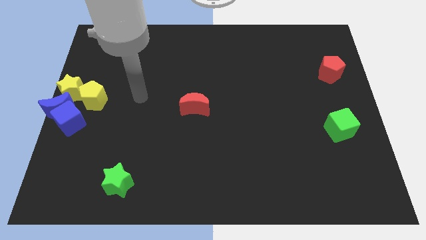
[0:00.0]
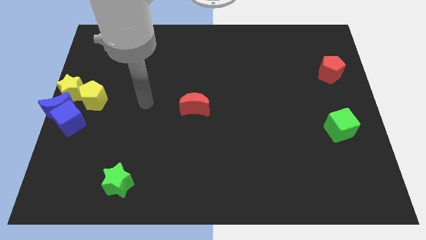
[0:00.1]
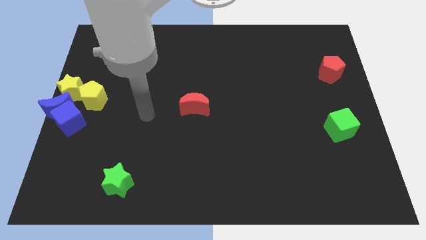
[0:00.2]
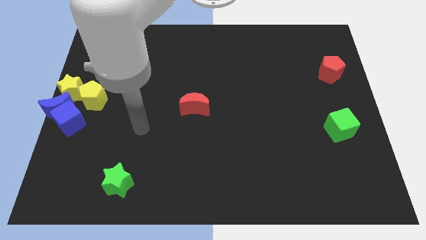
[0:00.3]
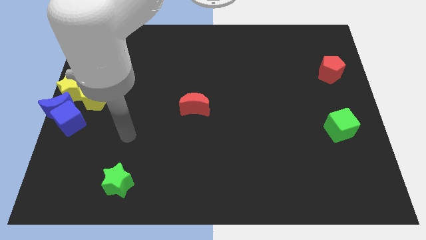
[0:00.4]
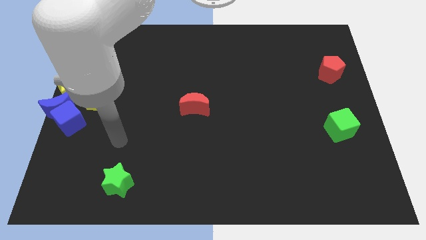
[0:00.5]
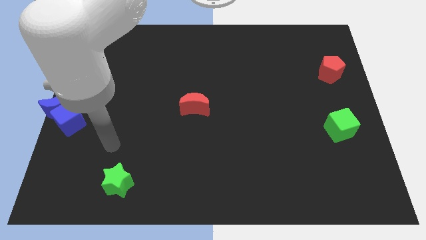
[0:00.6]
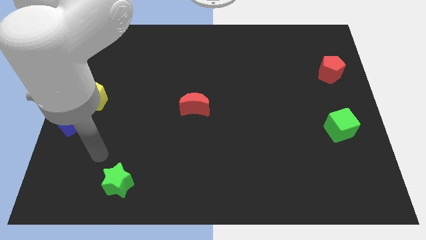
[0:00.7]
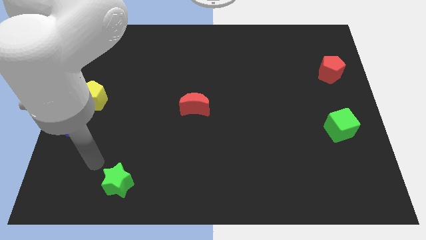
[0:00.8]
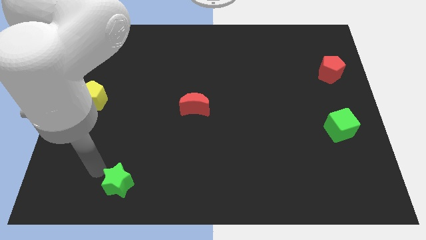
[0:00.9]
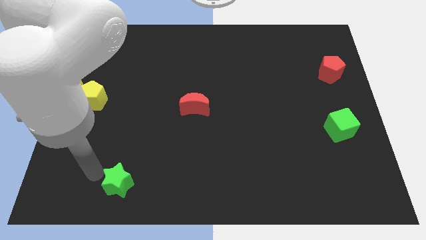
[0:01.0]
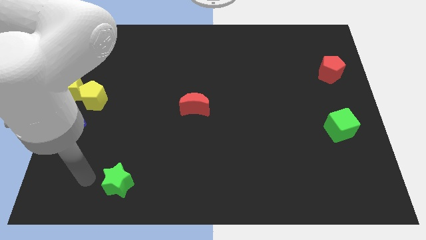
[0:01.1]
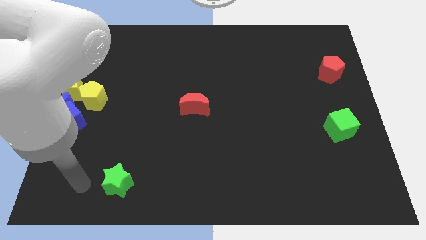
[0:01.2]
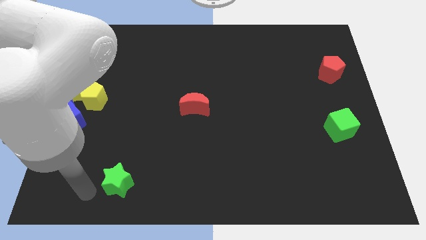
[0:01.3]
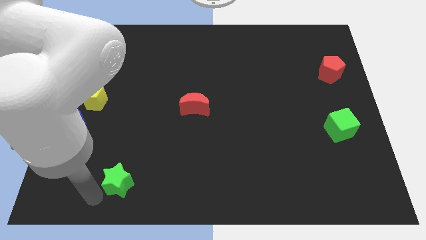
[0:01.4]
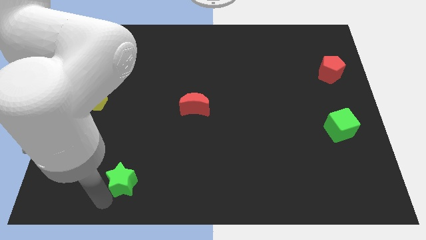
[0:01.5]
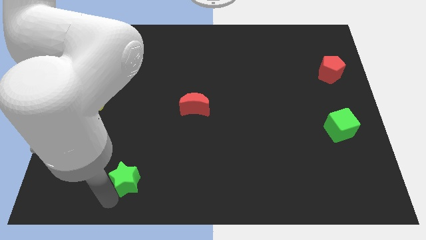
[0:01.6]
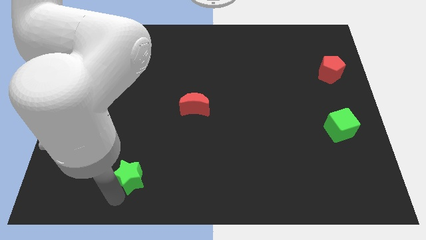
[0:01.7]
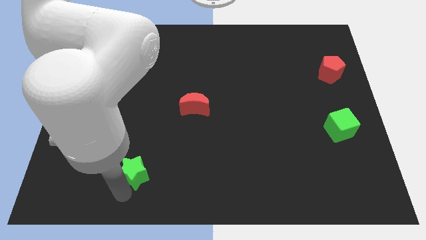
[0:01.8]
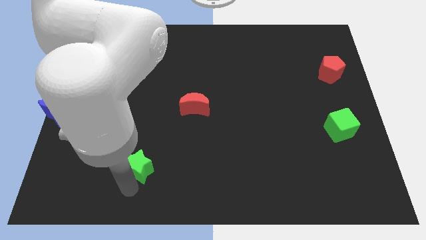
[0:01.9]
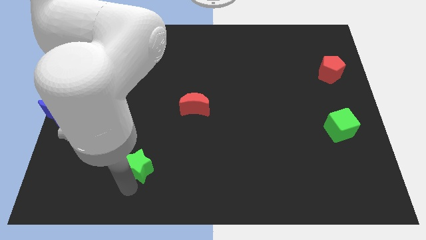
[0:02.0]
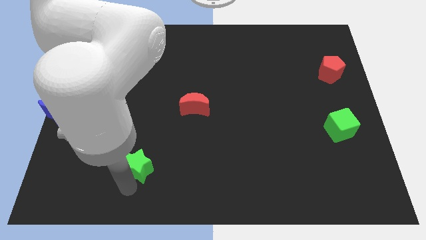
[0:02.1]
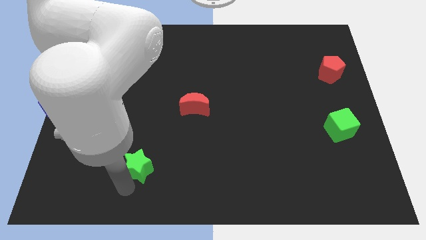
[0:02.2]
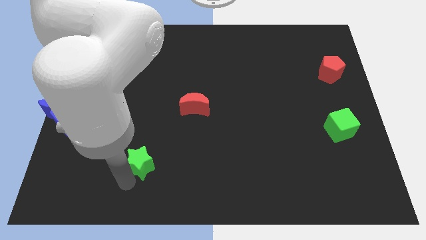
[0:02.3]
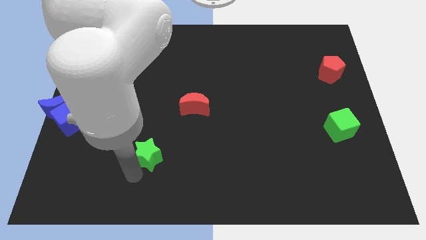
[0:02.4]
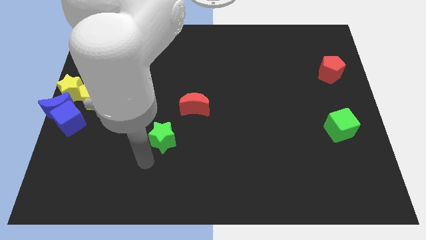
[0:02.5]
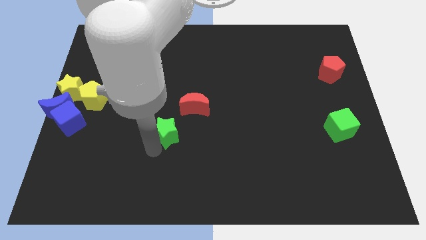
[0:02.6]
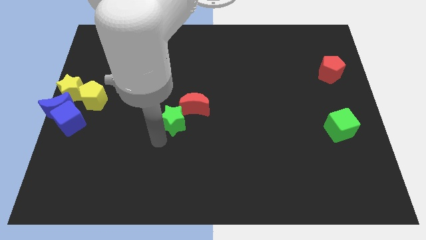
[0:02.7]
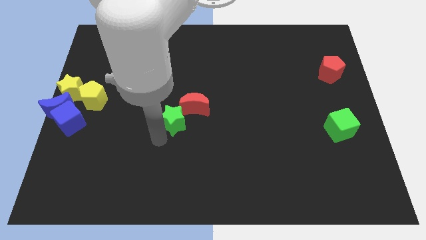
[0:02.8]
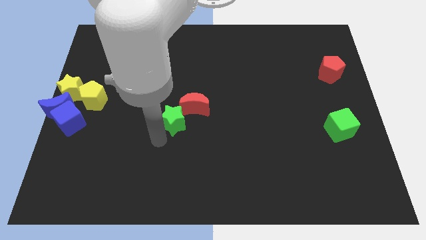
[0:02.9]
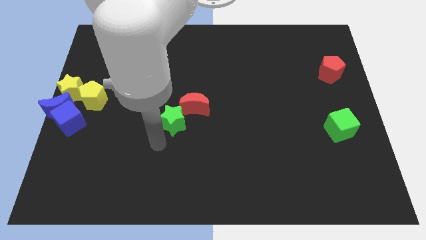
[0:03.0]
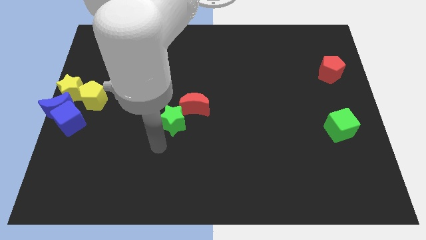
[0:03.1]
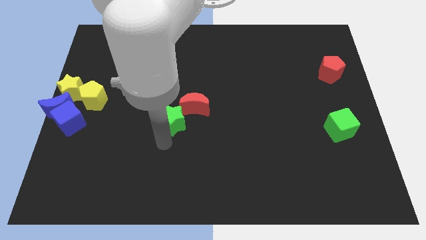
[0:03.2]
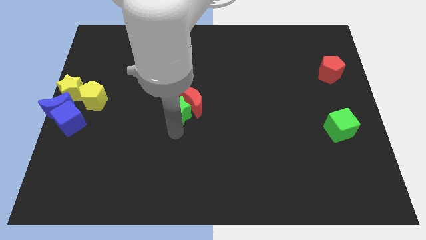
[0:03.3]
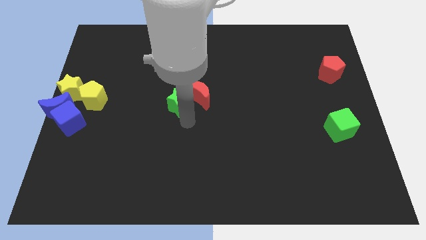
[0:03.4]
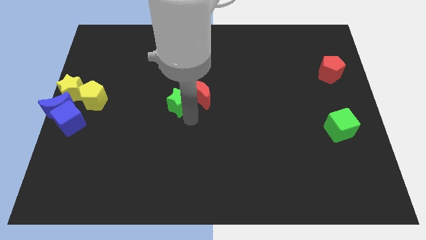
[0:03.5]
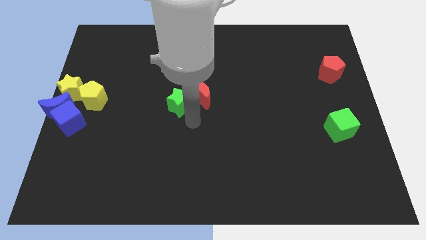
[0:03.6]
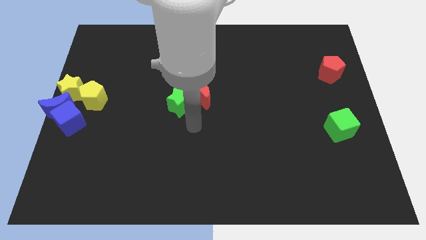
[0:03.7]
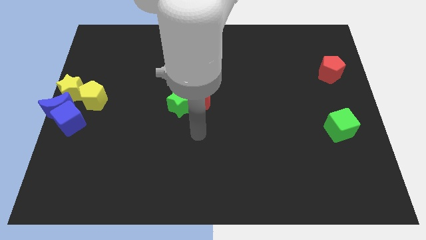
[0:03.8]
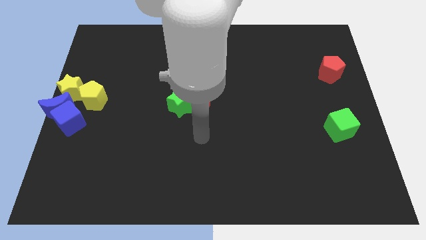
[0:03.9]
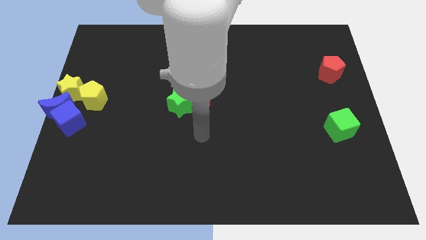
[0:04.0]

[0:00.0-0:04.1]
move green star into red moon

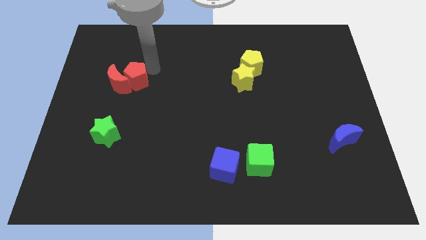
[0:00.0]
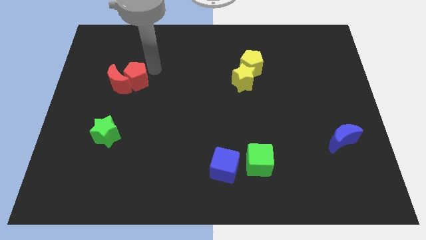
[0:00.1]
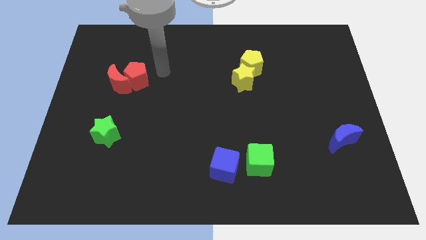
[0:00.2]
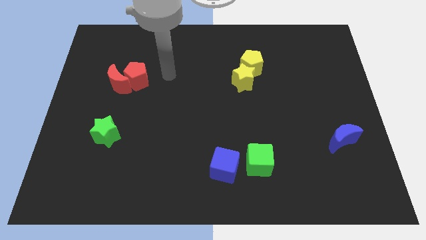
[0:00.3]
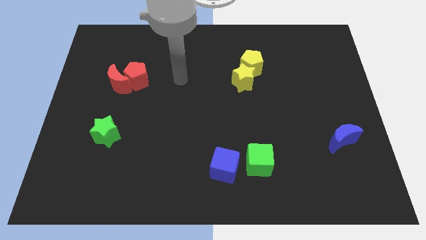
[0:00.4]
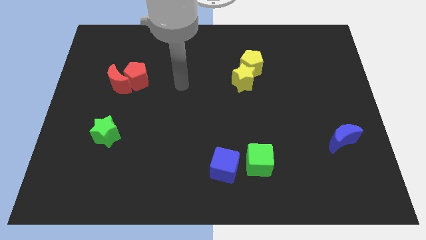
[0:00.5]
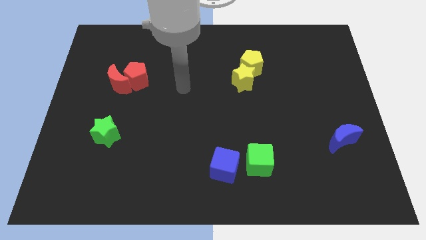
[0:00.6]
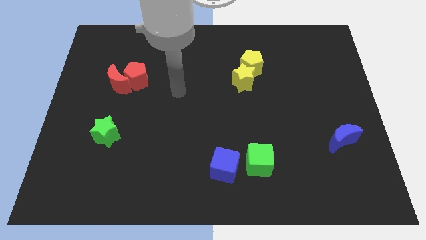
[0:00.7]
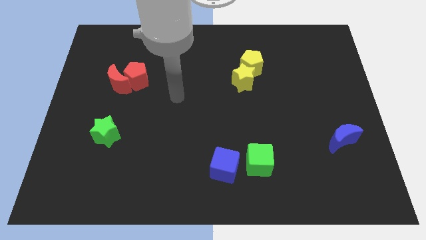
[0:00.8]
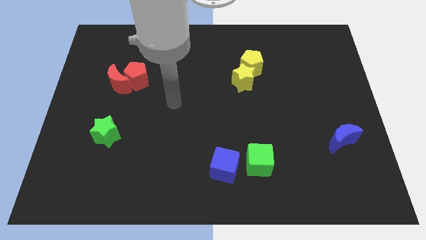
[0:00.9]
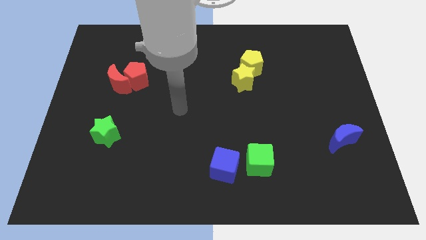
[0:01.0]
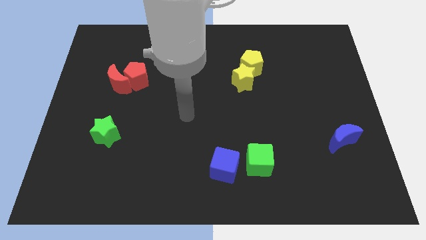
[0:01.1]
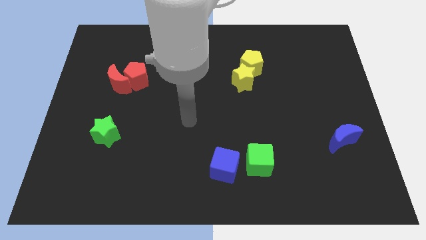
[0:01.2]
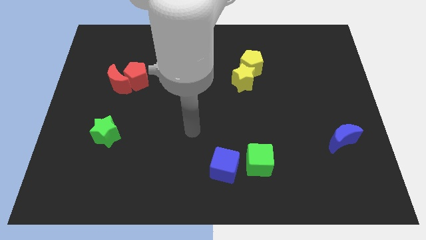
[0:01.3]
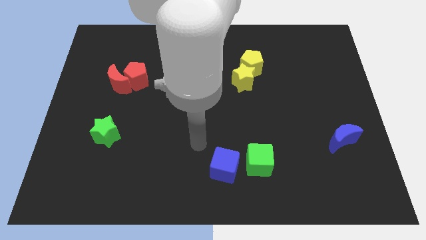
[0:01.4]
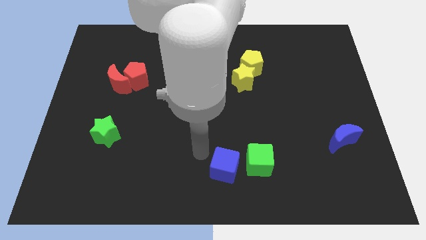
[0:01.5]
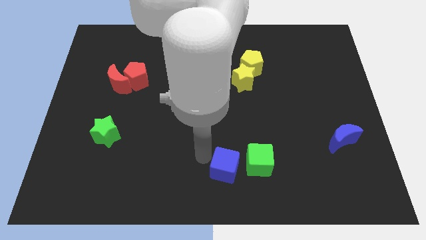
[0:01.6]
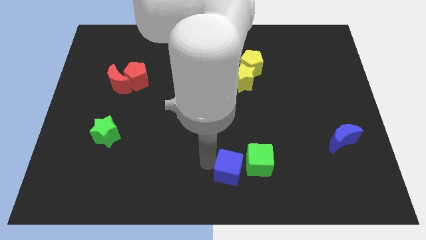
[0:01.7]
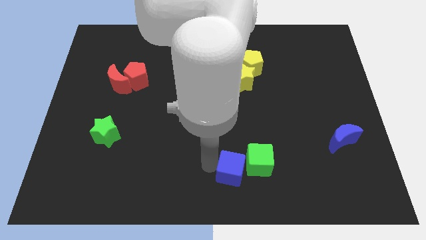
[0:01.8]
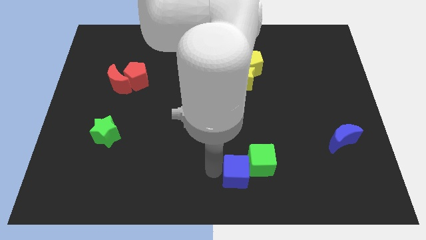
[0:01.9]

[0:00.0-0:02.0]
push the blue block into the green cube

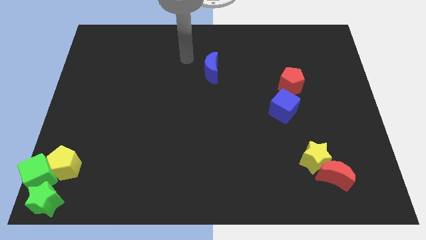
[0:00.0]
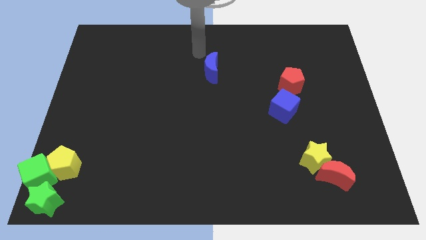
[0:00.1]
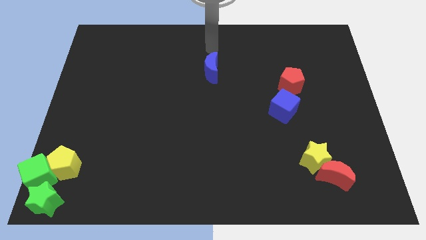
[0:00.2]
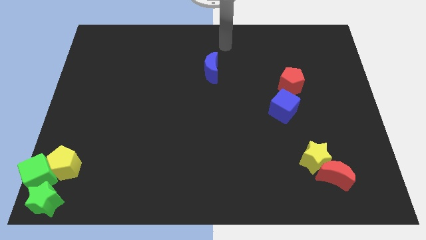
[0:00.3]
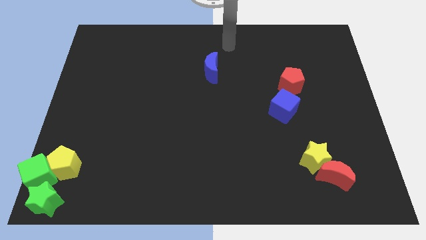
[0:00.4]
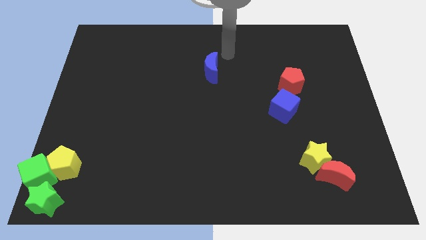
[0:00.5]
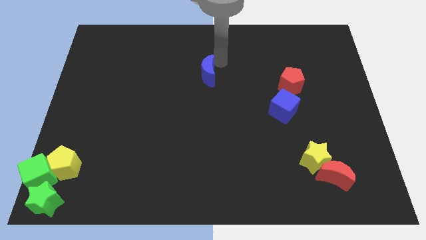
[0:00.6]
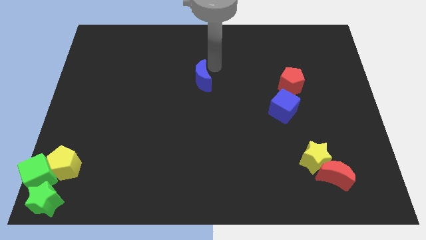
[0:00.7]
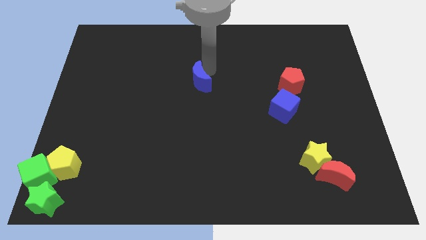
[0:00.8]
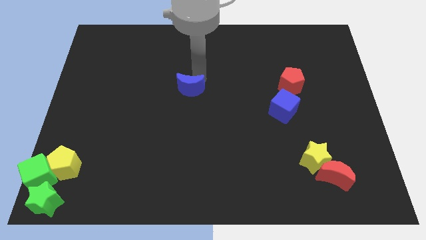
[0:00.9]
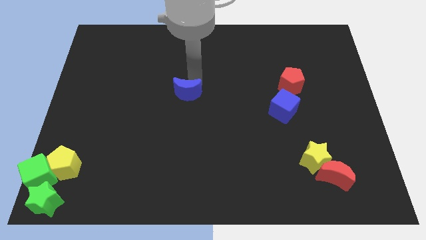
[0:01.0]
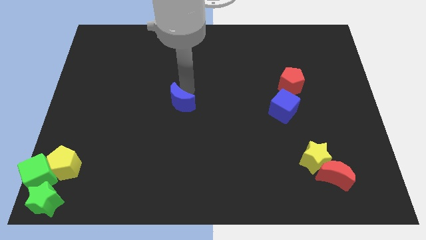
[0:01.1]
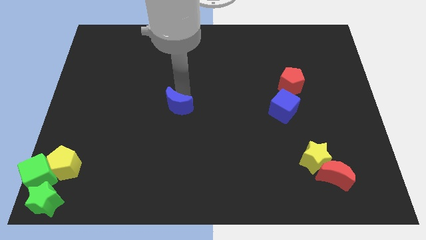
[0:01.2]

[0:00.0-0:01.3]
move the blue crescent at the center of the board

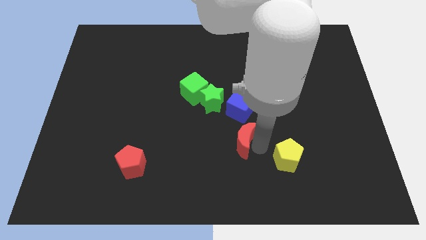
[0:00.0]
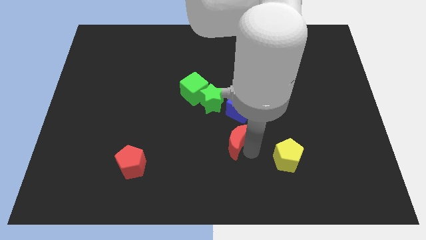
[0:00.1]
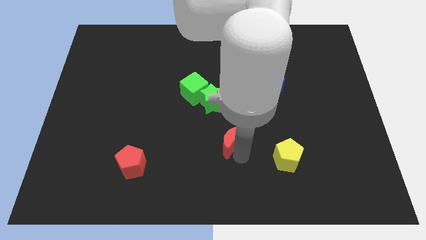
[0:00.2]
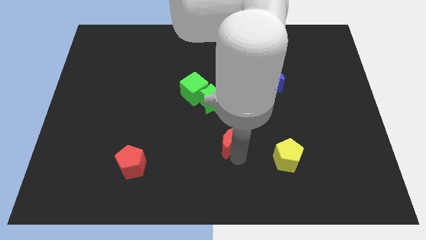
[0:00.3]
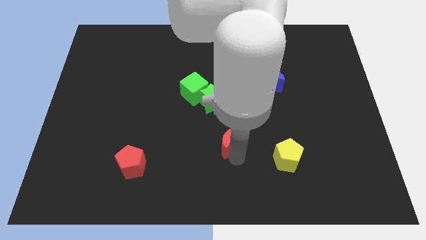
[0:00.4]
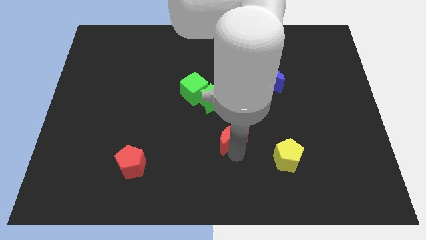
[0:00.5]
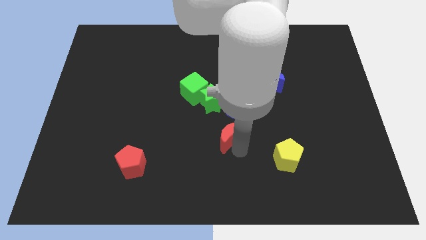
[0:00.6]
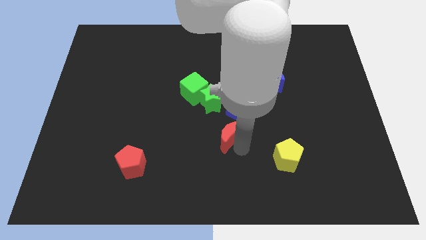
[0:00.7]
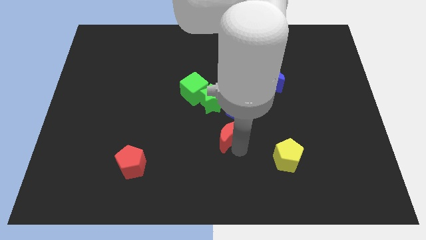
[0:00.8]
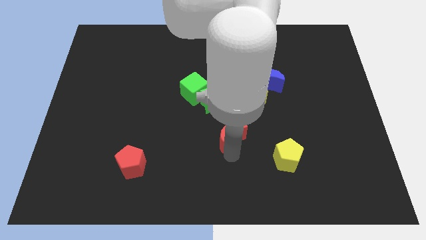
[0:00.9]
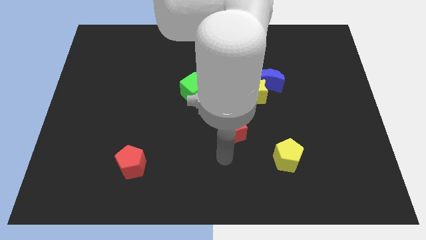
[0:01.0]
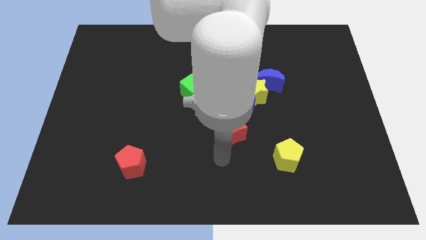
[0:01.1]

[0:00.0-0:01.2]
move the red moon below the blue cube

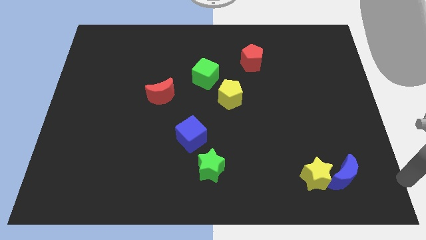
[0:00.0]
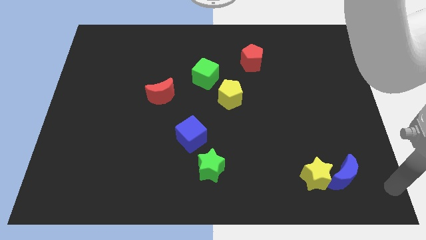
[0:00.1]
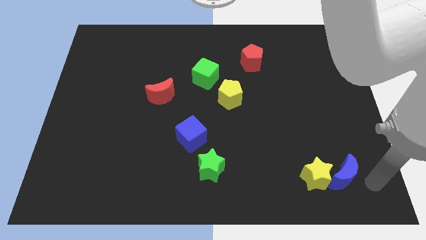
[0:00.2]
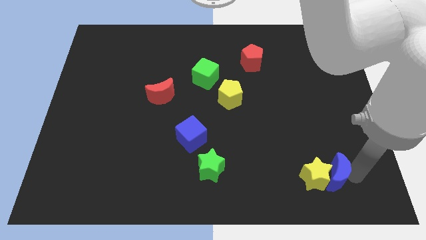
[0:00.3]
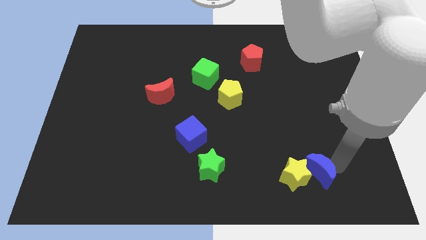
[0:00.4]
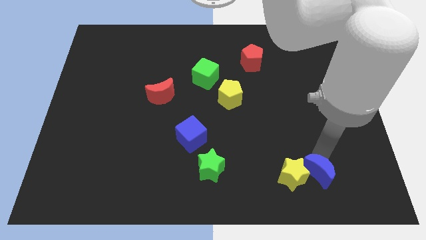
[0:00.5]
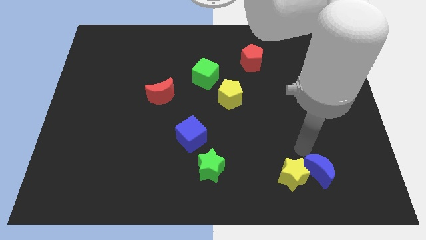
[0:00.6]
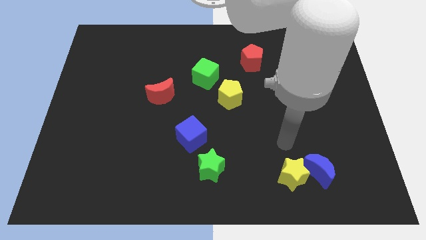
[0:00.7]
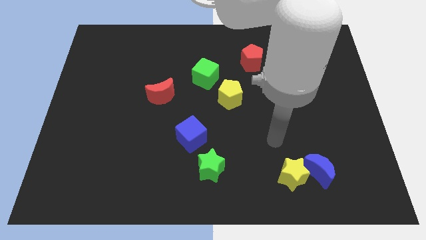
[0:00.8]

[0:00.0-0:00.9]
move the blue crescent slightly left to the yellow star
